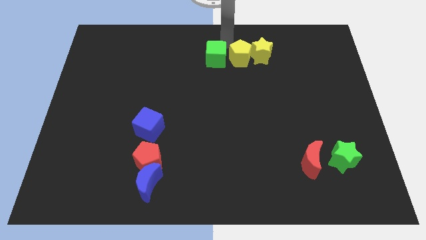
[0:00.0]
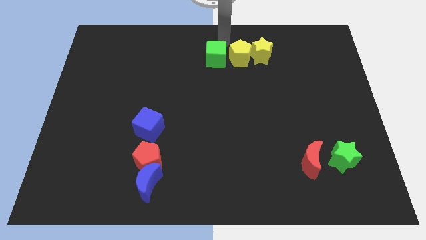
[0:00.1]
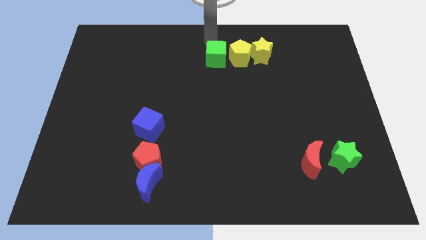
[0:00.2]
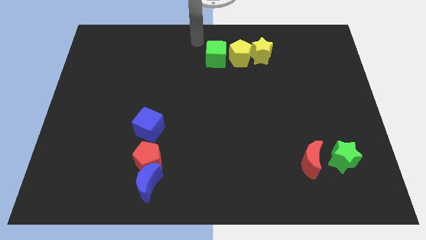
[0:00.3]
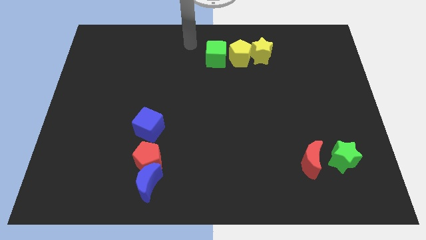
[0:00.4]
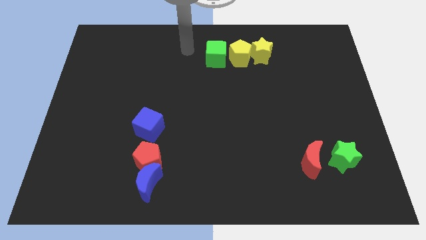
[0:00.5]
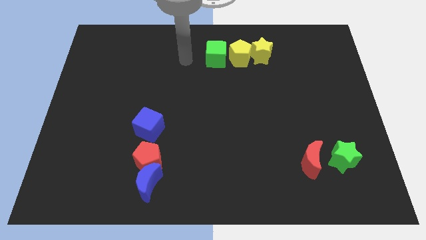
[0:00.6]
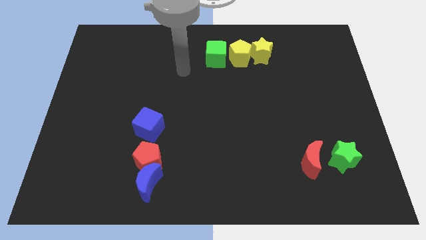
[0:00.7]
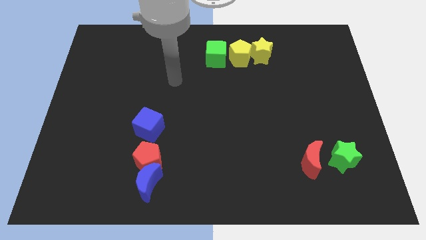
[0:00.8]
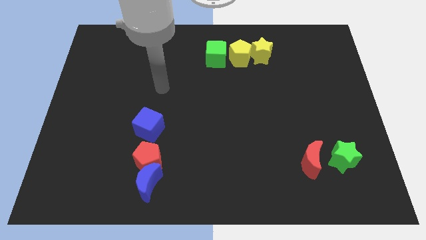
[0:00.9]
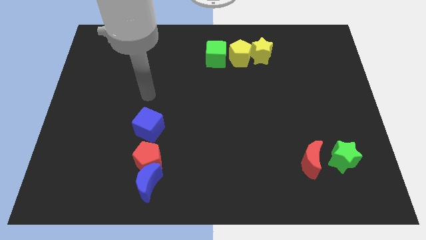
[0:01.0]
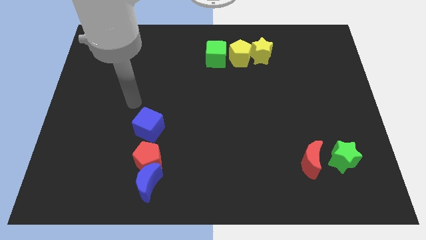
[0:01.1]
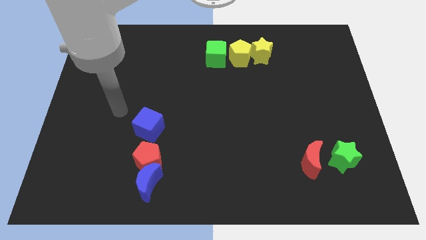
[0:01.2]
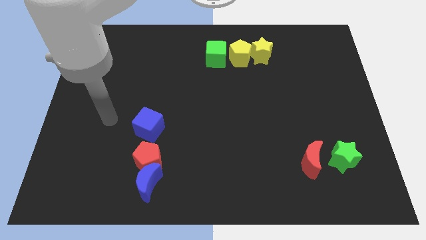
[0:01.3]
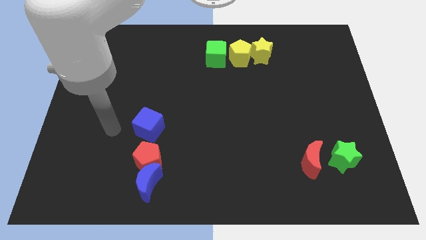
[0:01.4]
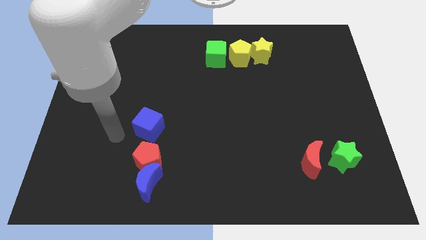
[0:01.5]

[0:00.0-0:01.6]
move your arm from green cube to the left of blue cube

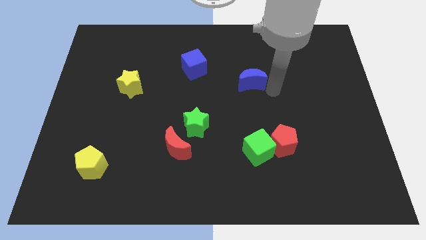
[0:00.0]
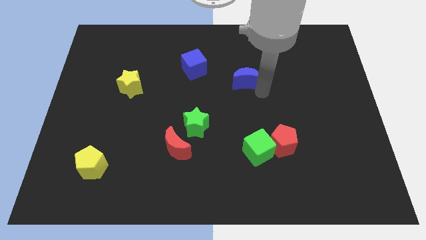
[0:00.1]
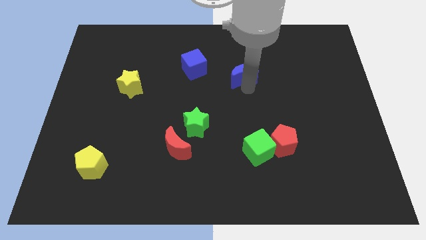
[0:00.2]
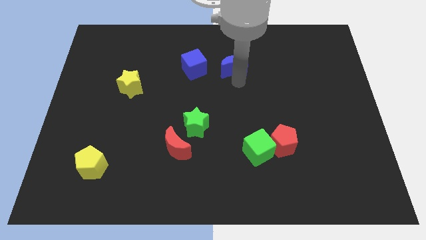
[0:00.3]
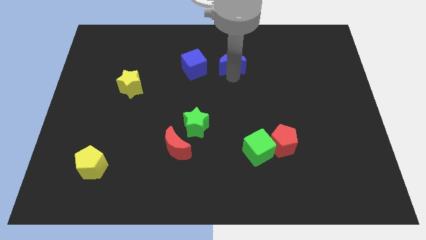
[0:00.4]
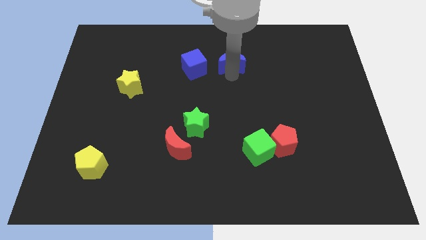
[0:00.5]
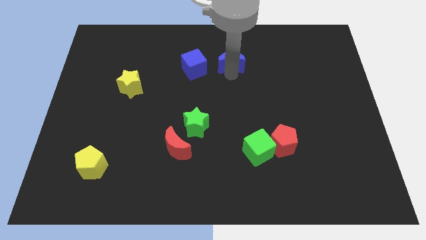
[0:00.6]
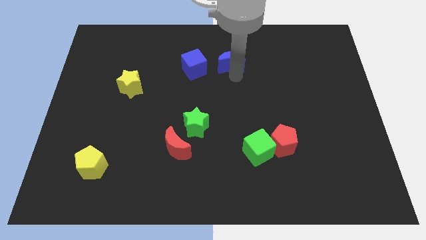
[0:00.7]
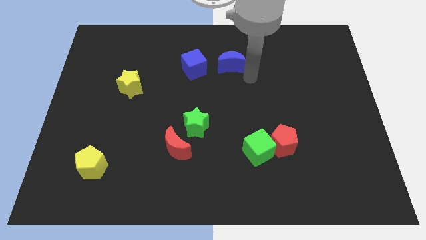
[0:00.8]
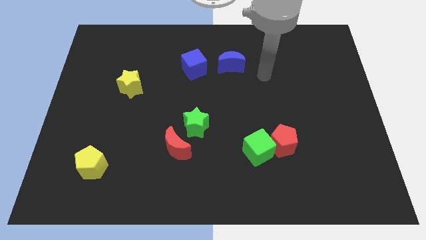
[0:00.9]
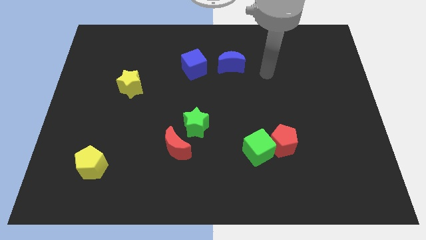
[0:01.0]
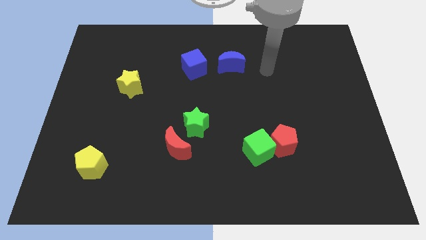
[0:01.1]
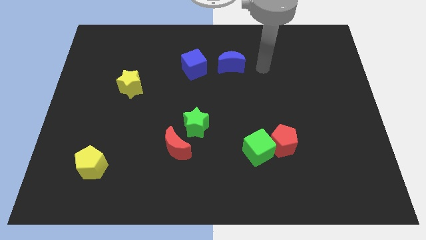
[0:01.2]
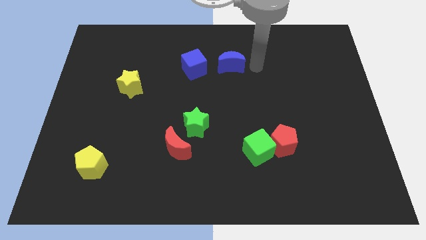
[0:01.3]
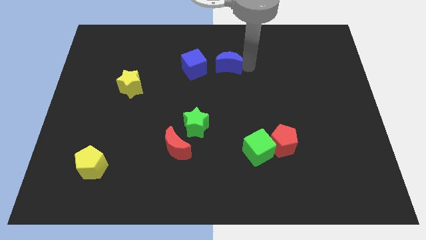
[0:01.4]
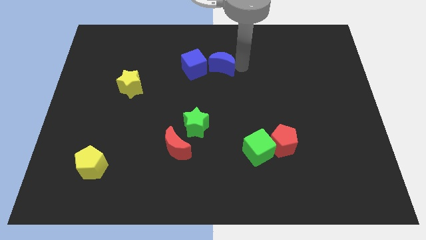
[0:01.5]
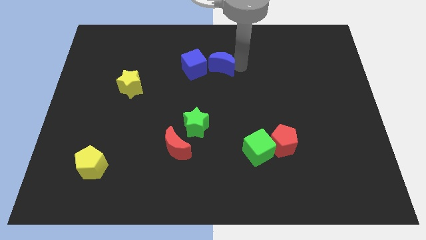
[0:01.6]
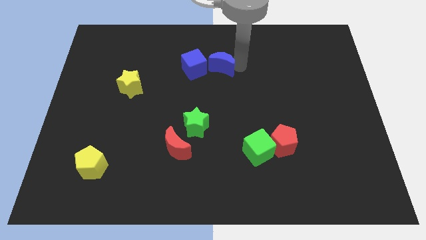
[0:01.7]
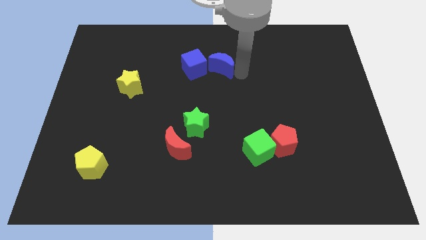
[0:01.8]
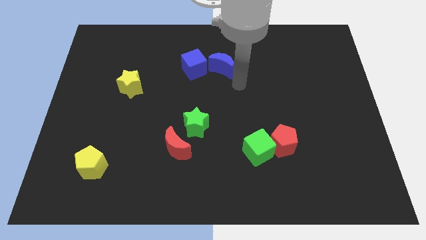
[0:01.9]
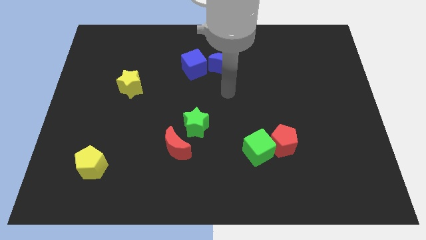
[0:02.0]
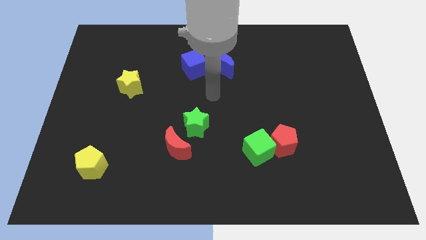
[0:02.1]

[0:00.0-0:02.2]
place the blue crescent at the right side of the blue cube

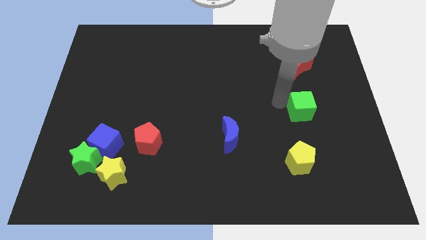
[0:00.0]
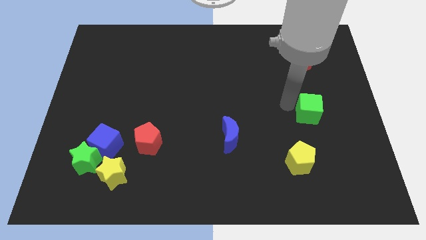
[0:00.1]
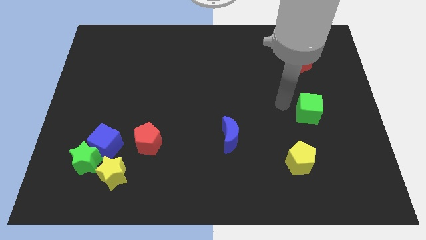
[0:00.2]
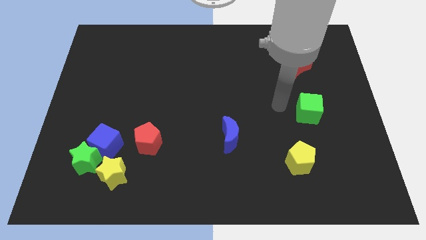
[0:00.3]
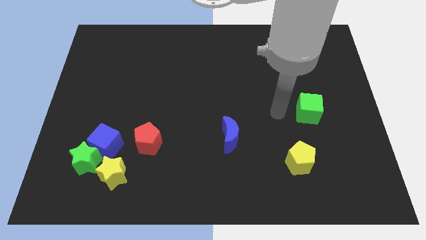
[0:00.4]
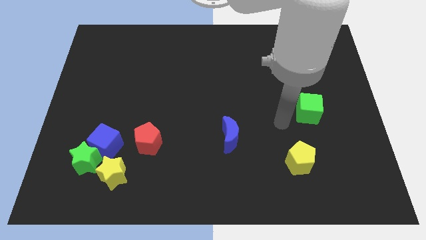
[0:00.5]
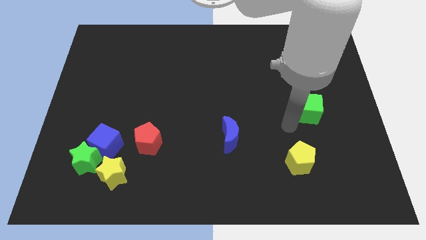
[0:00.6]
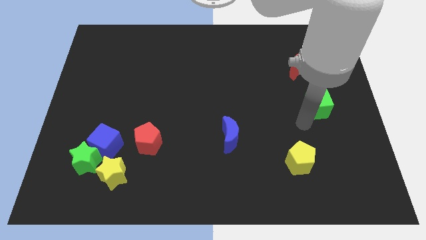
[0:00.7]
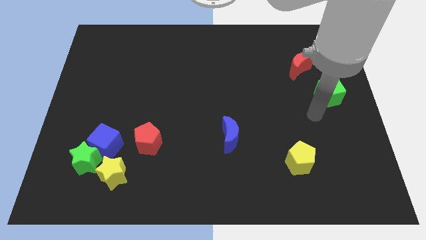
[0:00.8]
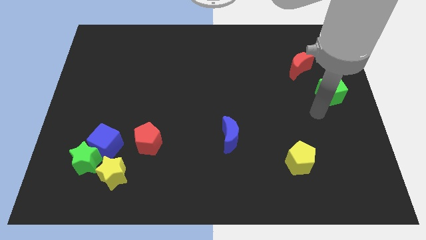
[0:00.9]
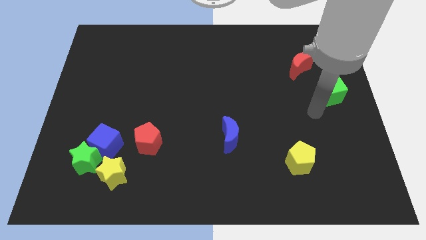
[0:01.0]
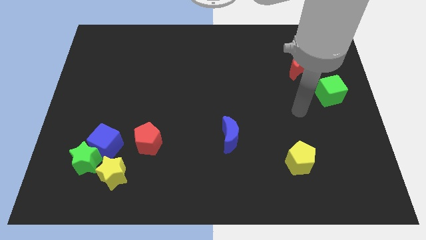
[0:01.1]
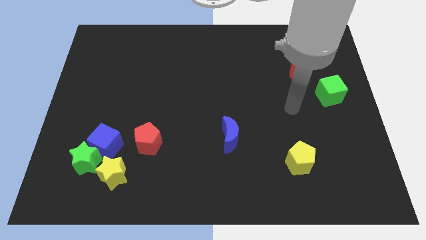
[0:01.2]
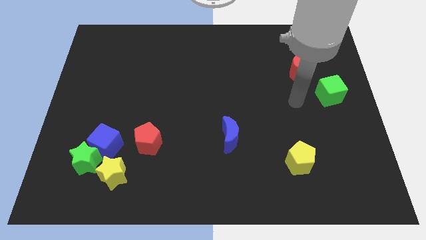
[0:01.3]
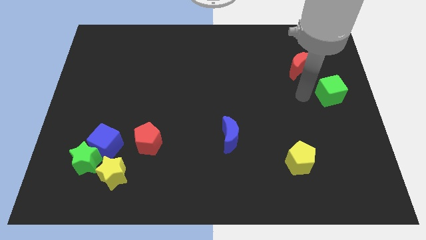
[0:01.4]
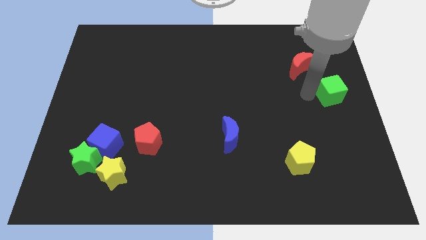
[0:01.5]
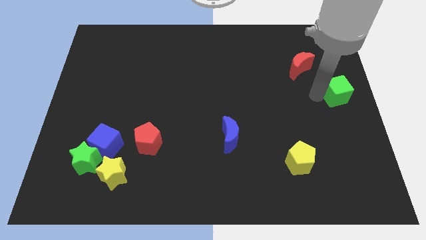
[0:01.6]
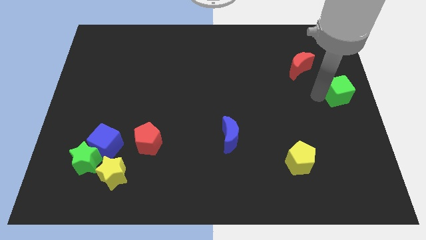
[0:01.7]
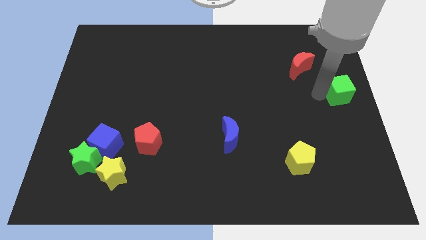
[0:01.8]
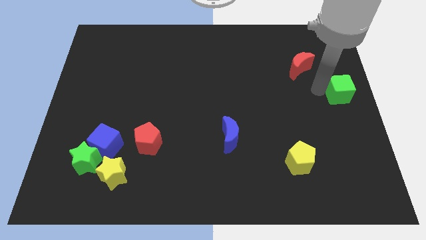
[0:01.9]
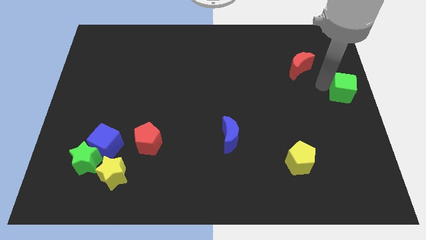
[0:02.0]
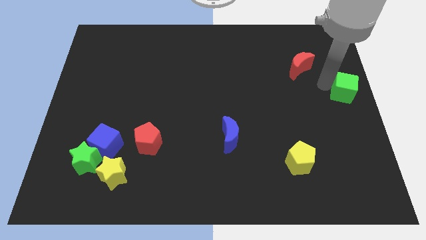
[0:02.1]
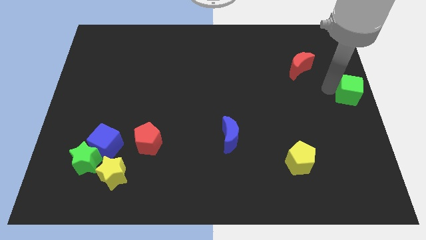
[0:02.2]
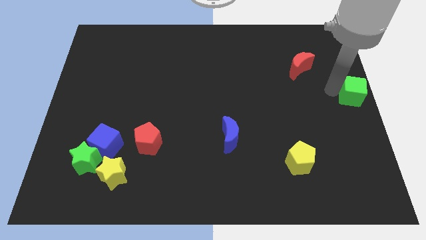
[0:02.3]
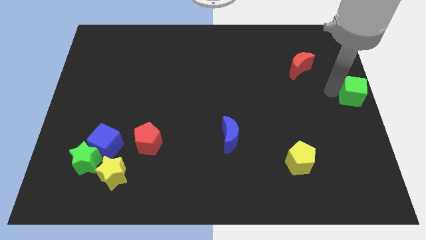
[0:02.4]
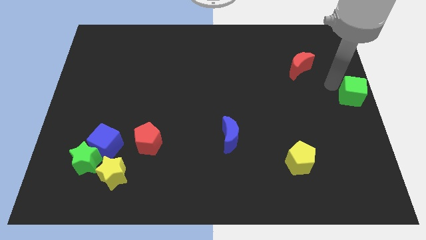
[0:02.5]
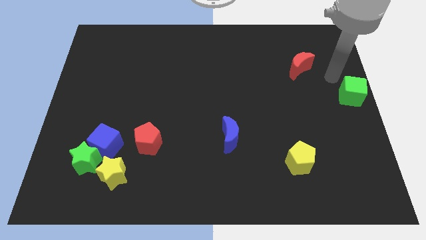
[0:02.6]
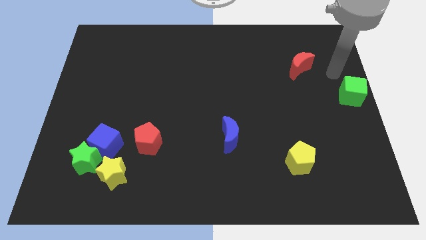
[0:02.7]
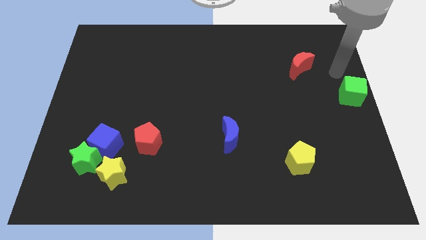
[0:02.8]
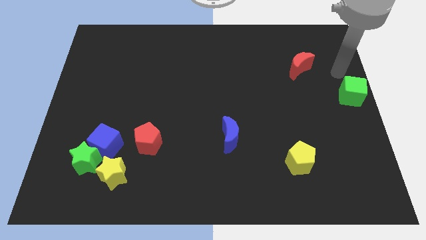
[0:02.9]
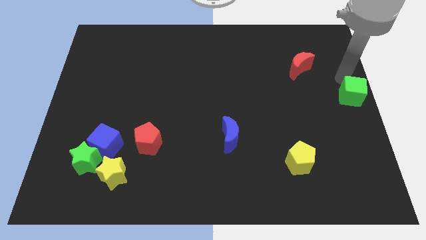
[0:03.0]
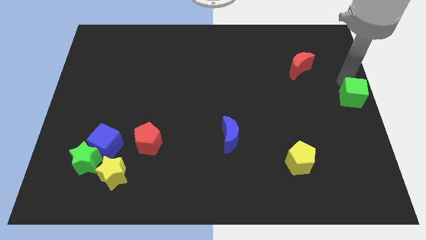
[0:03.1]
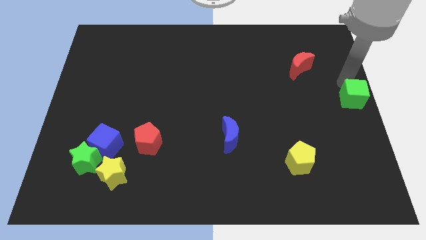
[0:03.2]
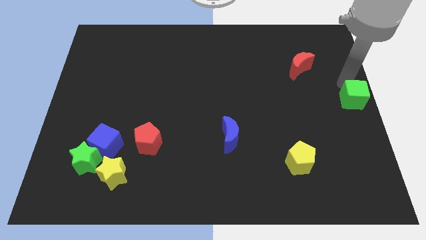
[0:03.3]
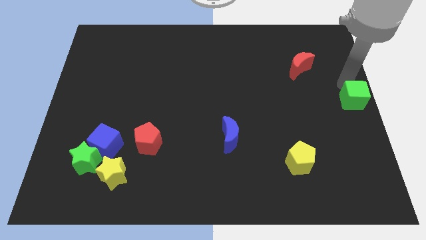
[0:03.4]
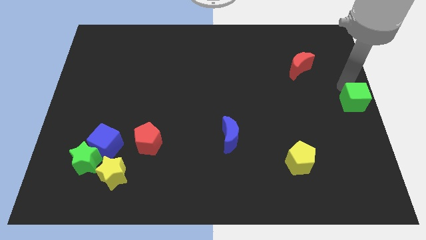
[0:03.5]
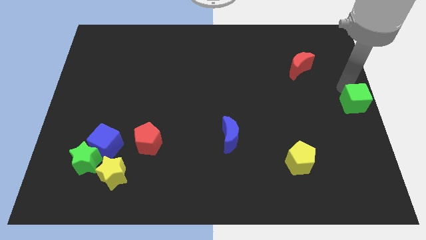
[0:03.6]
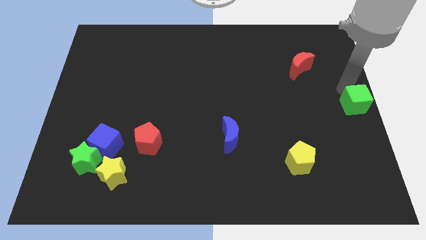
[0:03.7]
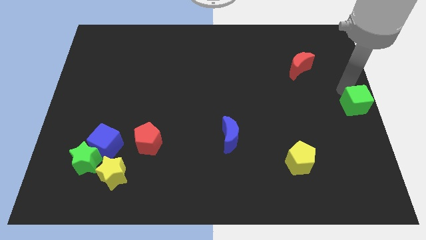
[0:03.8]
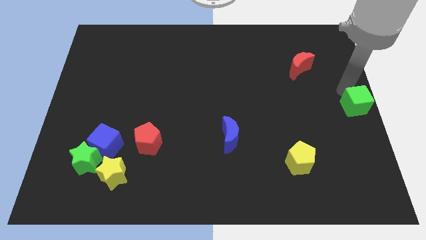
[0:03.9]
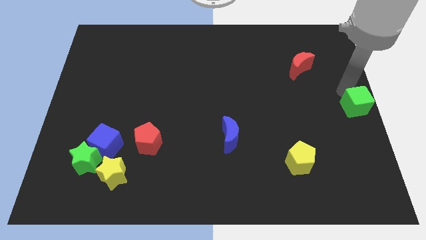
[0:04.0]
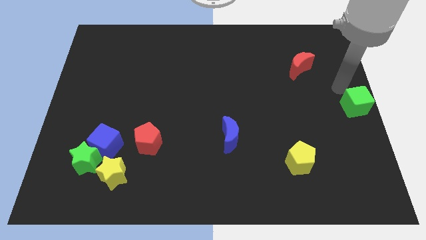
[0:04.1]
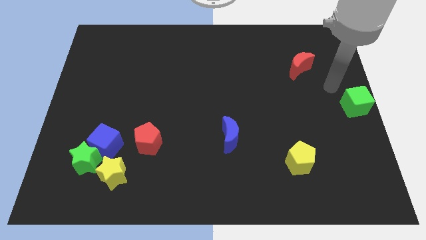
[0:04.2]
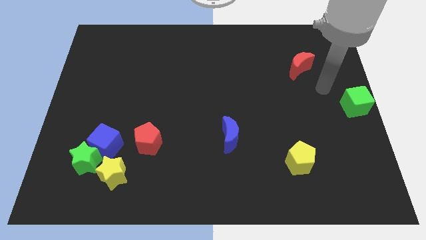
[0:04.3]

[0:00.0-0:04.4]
move the green cube to the right center of the board

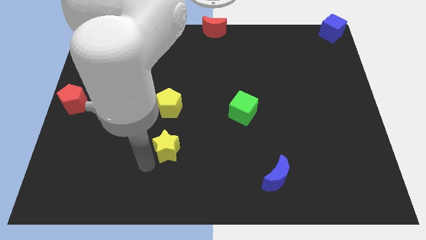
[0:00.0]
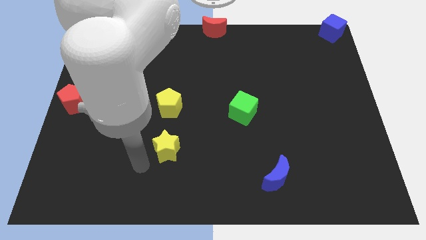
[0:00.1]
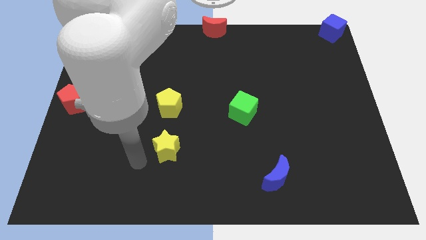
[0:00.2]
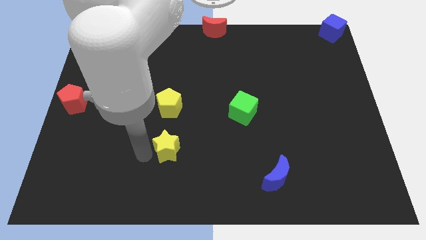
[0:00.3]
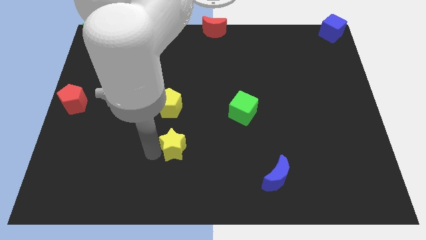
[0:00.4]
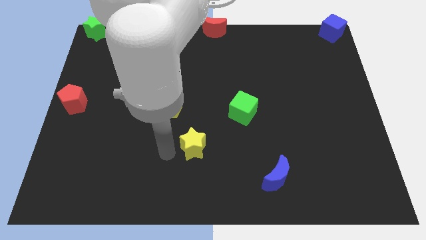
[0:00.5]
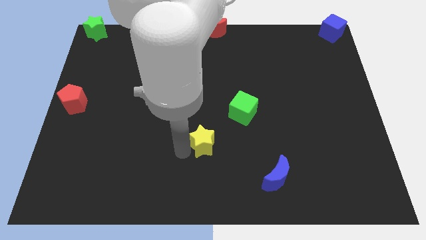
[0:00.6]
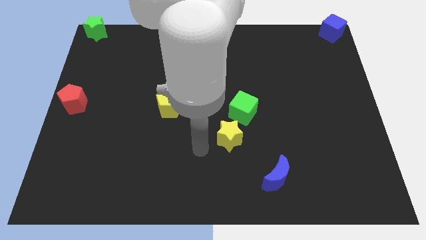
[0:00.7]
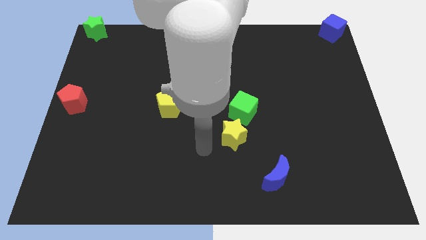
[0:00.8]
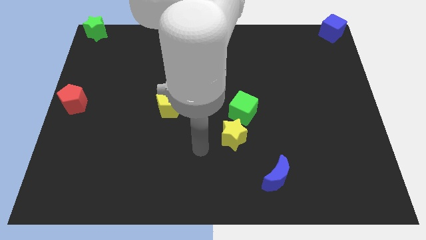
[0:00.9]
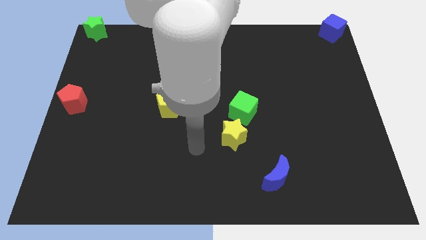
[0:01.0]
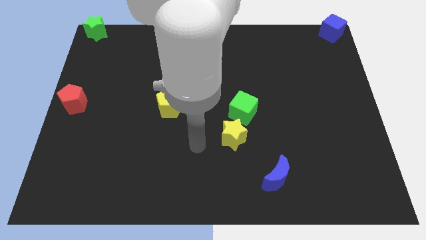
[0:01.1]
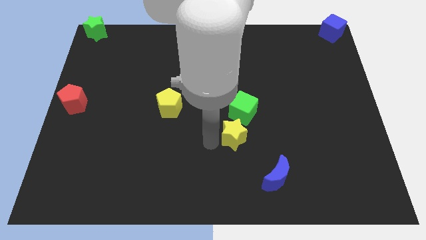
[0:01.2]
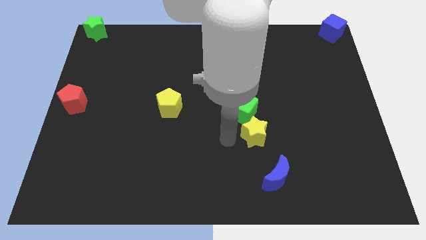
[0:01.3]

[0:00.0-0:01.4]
slide the yellow star bottom of the green cube
